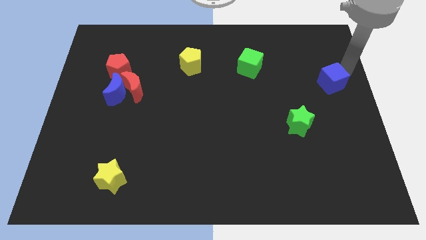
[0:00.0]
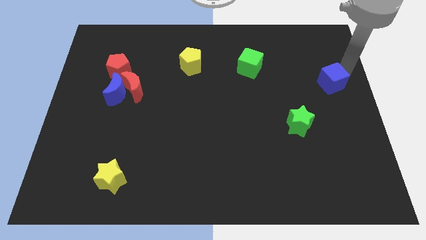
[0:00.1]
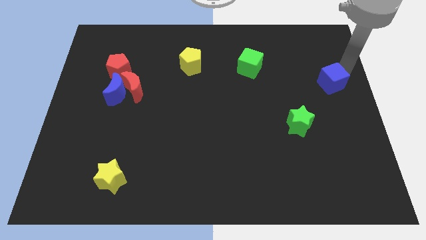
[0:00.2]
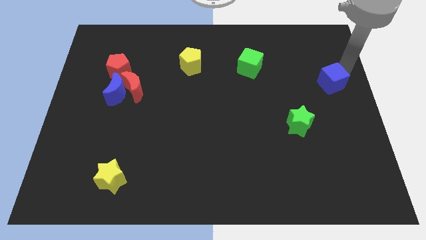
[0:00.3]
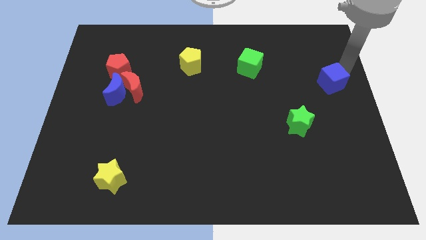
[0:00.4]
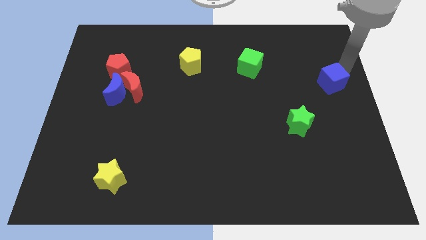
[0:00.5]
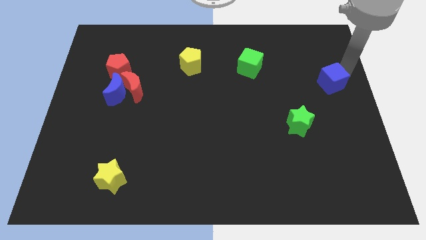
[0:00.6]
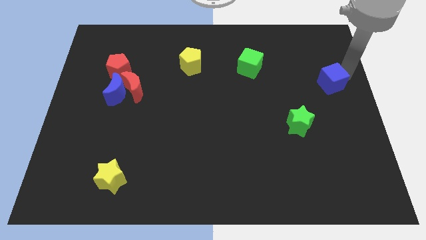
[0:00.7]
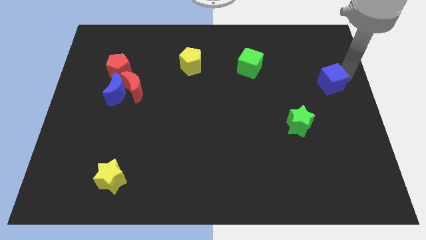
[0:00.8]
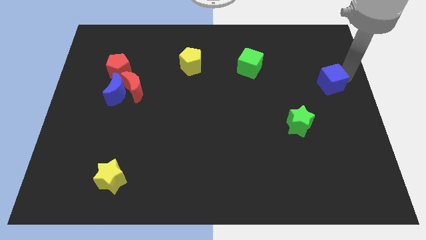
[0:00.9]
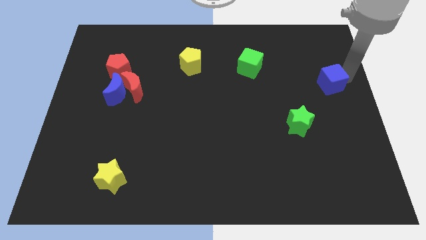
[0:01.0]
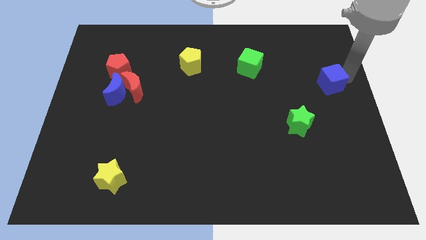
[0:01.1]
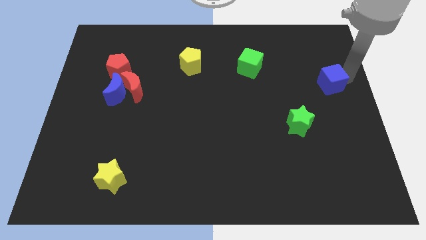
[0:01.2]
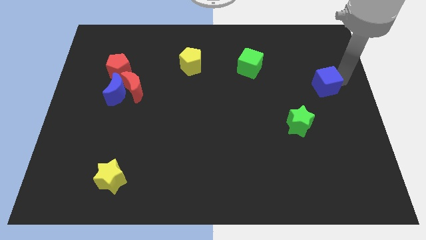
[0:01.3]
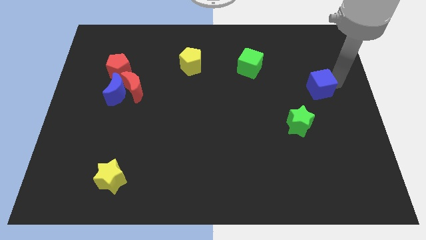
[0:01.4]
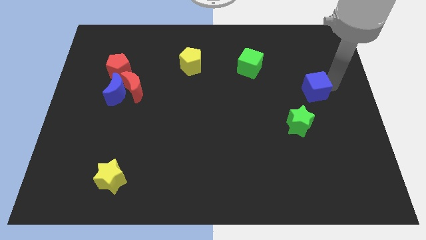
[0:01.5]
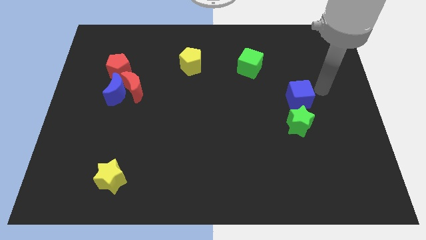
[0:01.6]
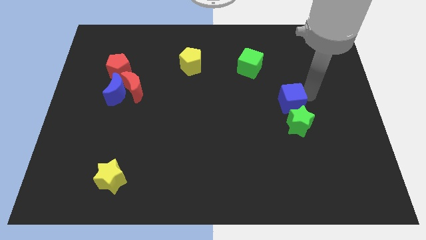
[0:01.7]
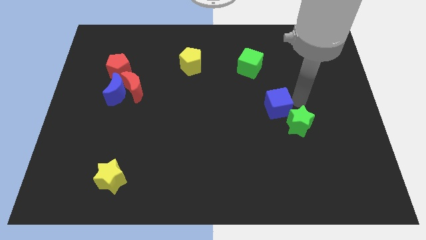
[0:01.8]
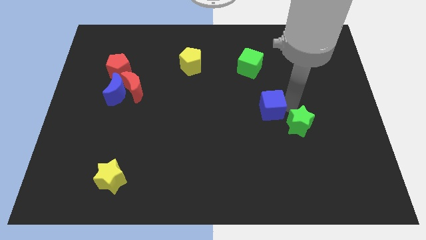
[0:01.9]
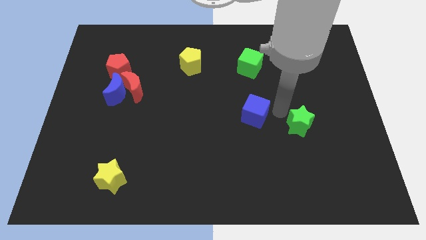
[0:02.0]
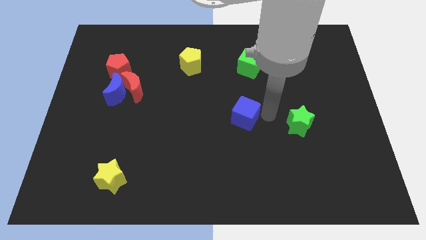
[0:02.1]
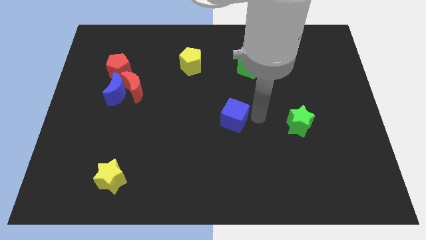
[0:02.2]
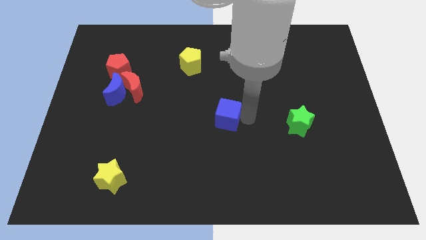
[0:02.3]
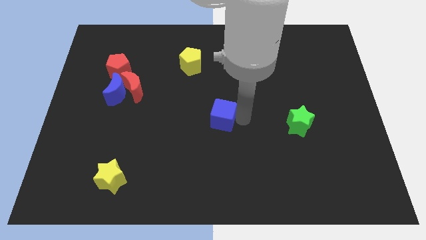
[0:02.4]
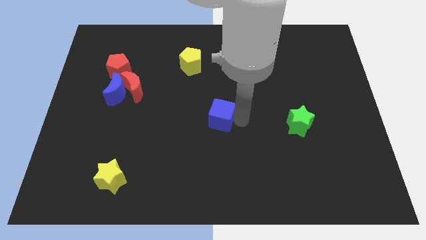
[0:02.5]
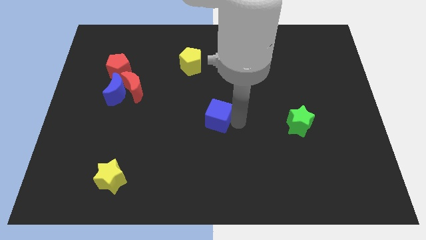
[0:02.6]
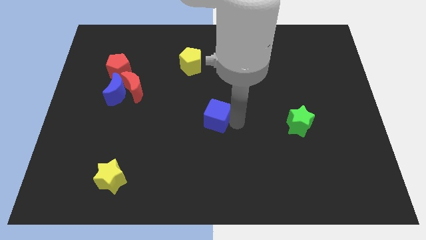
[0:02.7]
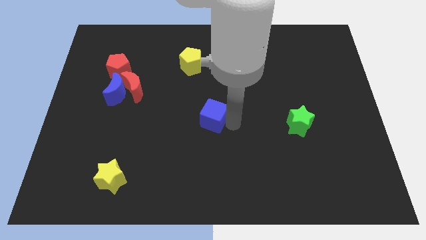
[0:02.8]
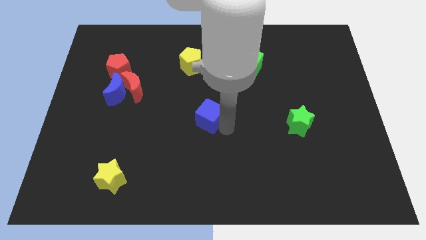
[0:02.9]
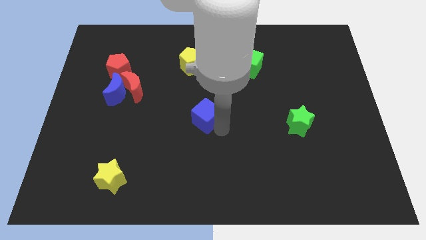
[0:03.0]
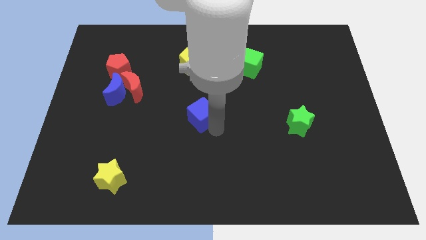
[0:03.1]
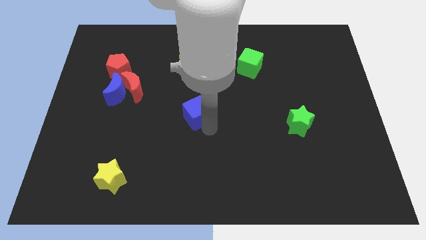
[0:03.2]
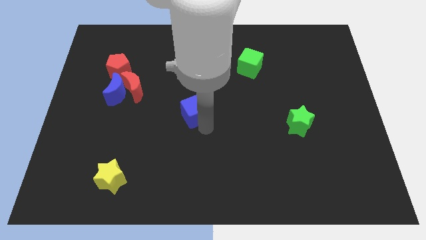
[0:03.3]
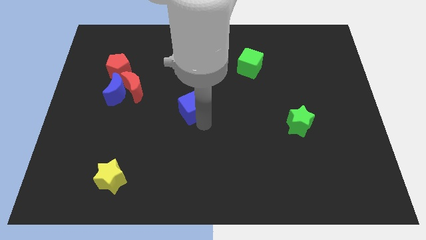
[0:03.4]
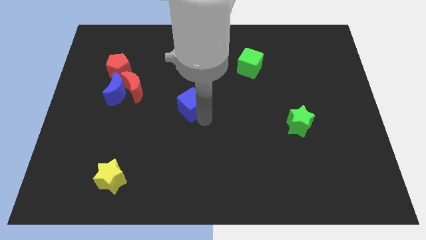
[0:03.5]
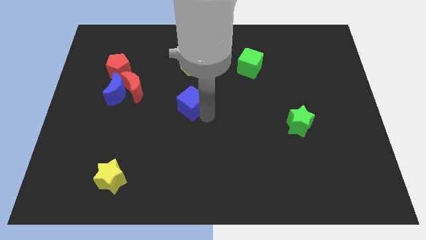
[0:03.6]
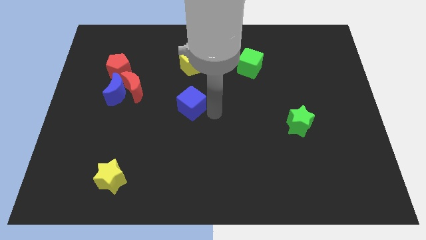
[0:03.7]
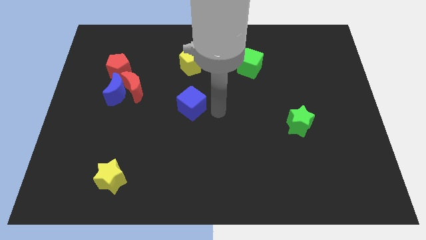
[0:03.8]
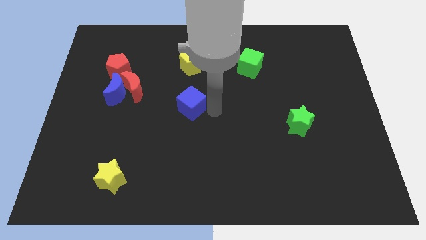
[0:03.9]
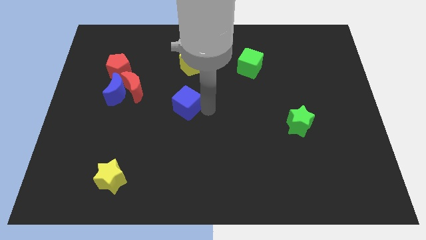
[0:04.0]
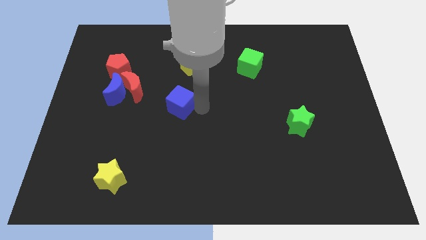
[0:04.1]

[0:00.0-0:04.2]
place the blue cube left to the green star

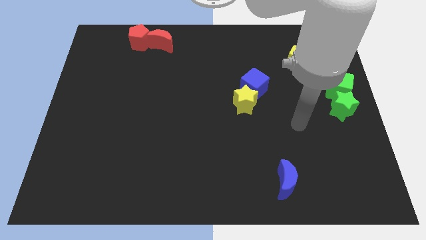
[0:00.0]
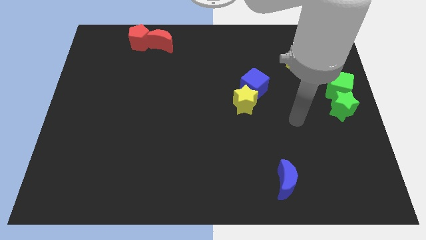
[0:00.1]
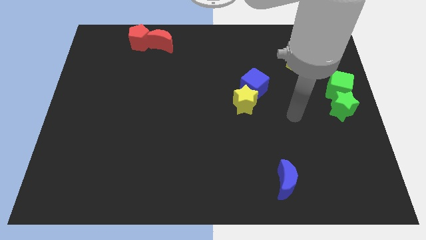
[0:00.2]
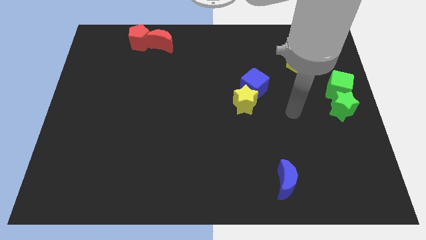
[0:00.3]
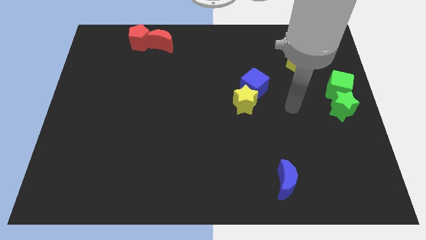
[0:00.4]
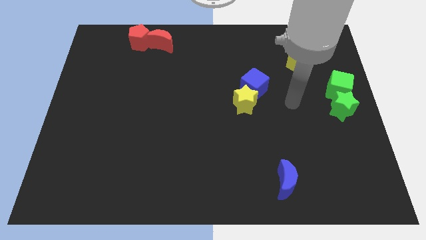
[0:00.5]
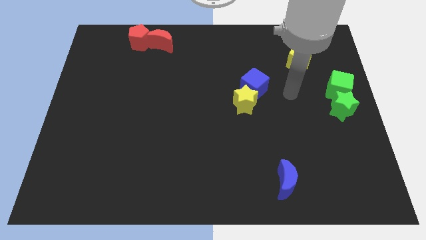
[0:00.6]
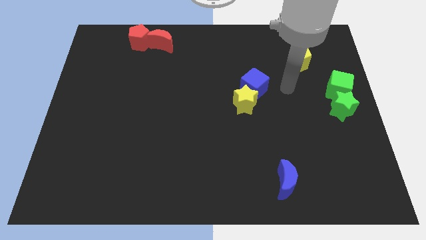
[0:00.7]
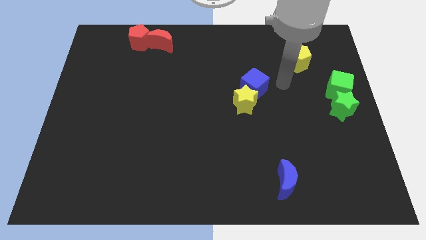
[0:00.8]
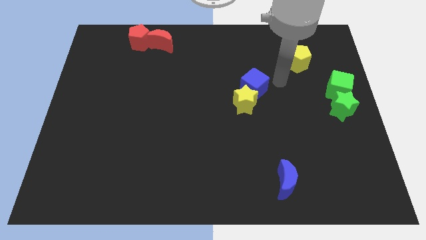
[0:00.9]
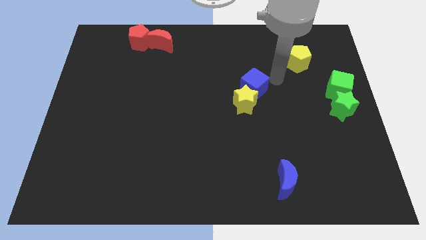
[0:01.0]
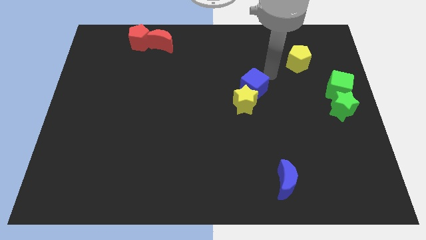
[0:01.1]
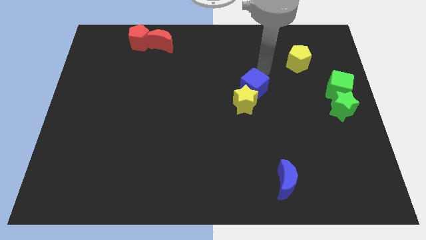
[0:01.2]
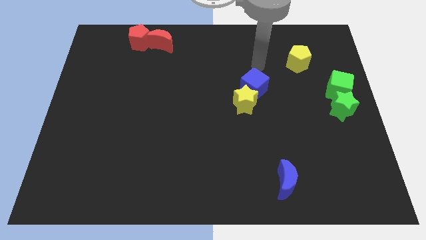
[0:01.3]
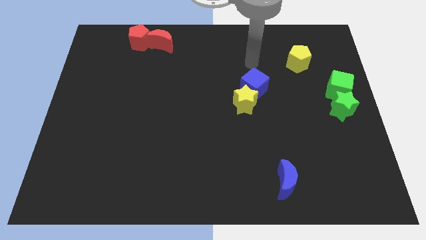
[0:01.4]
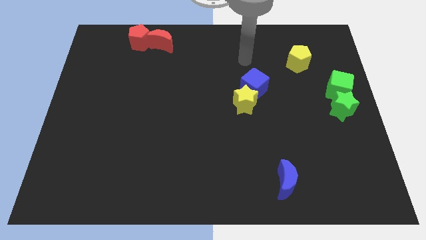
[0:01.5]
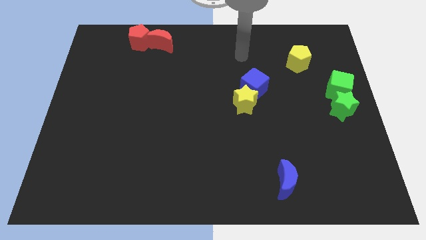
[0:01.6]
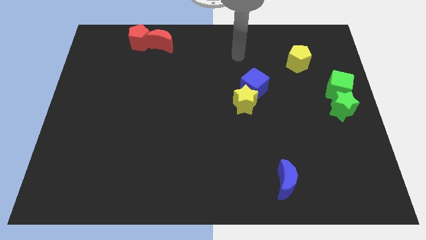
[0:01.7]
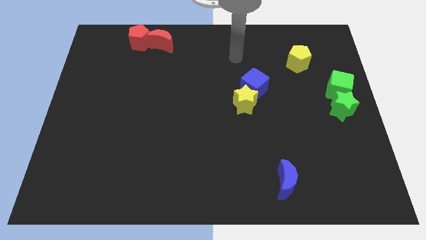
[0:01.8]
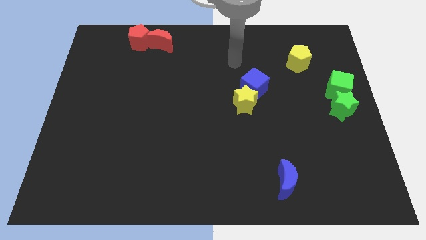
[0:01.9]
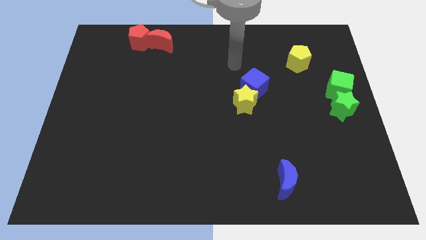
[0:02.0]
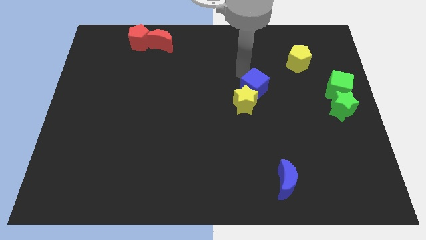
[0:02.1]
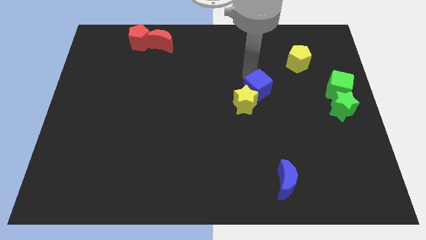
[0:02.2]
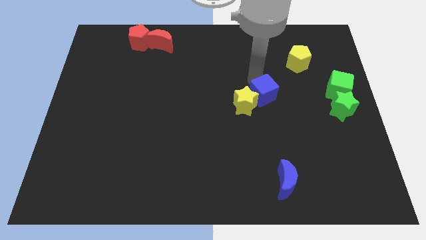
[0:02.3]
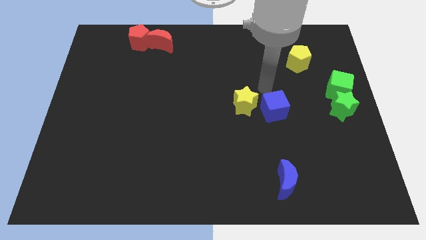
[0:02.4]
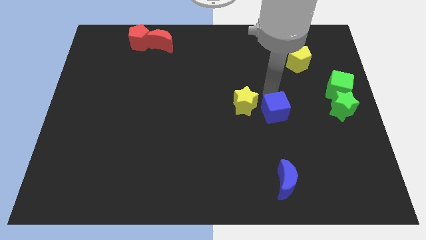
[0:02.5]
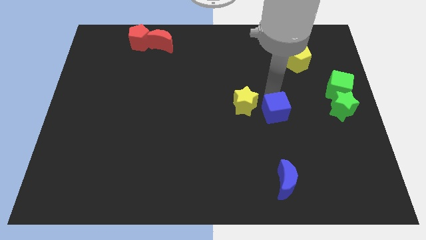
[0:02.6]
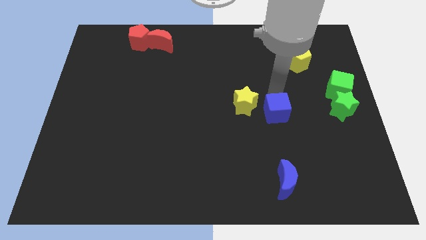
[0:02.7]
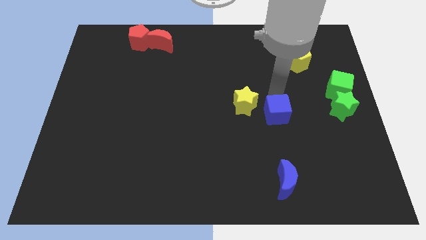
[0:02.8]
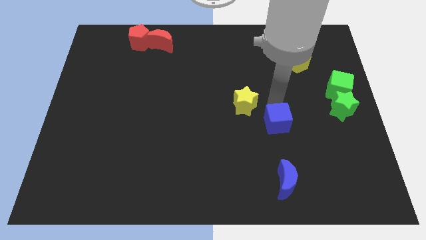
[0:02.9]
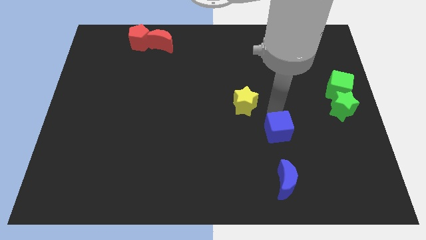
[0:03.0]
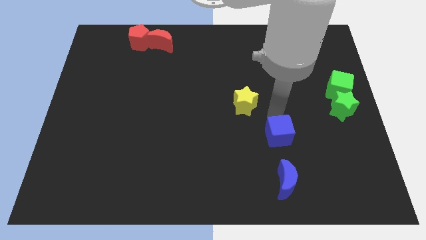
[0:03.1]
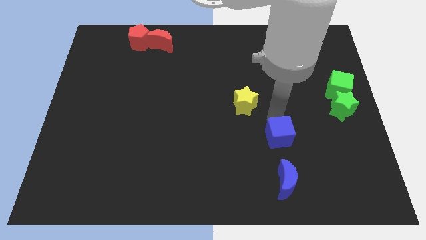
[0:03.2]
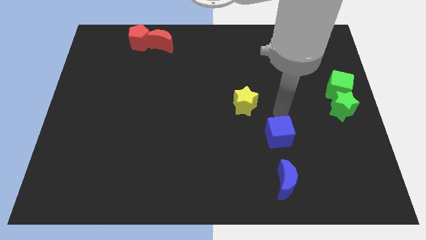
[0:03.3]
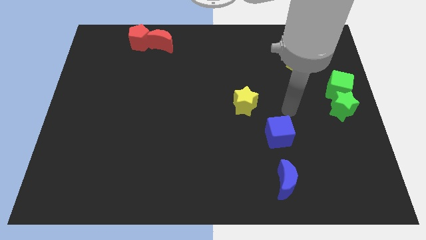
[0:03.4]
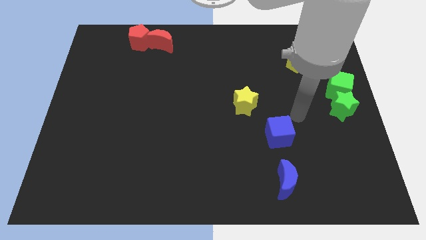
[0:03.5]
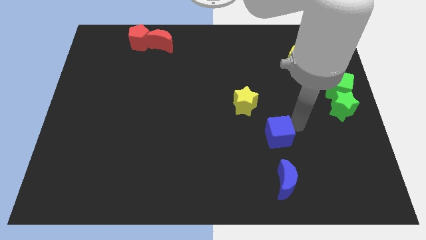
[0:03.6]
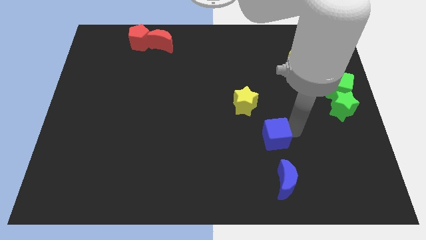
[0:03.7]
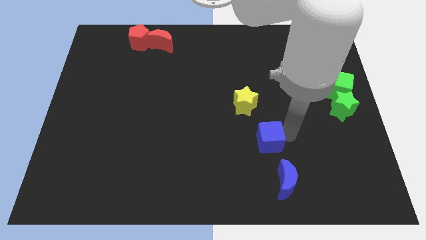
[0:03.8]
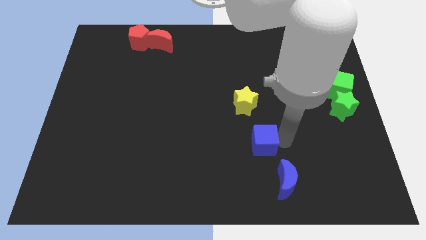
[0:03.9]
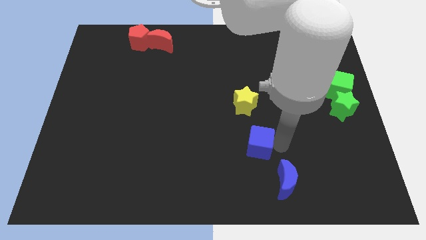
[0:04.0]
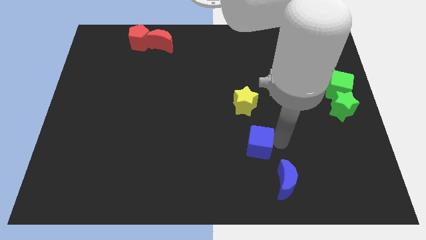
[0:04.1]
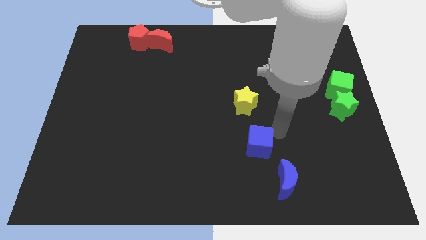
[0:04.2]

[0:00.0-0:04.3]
separate blue cube from the yellow star

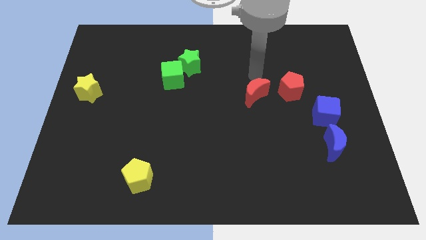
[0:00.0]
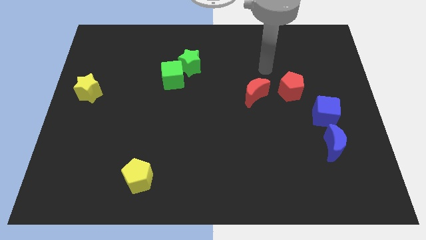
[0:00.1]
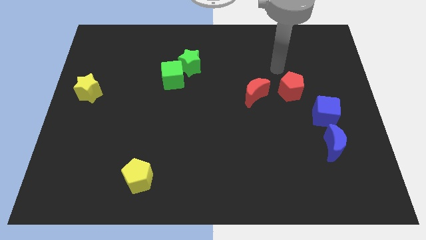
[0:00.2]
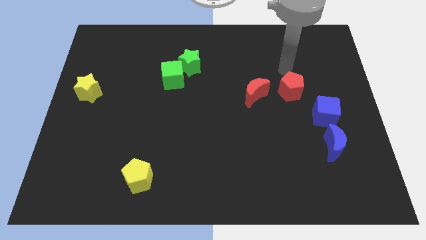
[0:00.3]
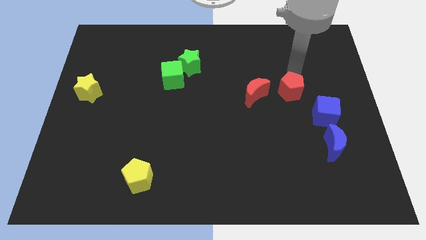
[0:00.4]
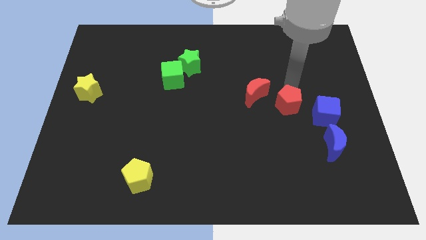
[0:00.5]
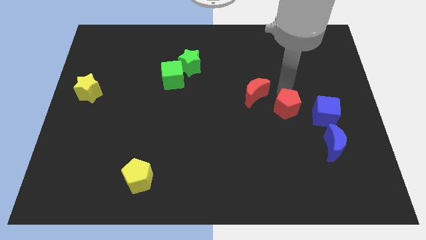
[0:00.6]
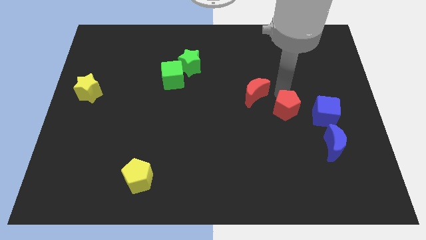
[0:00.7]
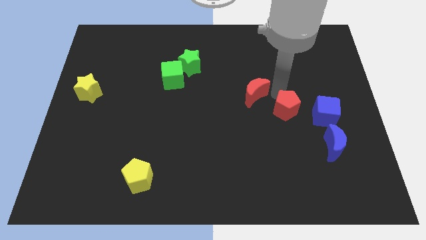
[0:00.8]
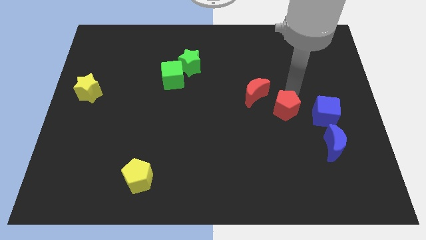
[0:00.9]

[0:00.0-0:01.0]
push the red pentagon to the bottom right of the red crescent
